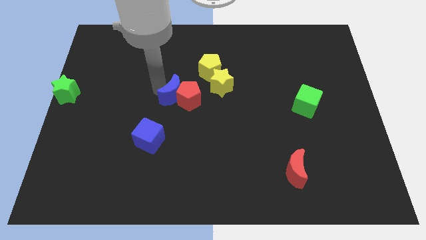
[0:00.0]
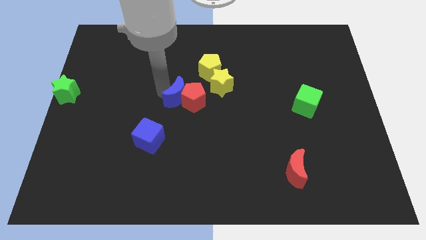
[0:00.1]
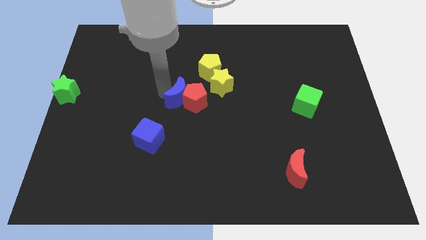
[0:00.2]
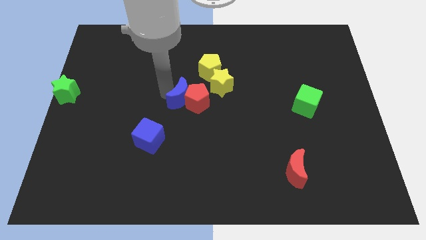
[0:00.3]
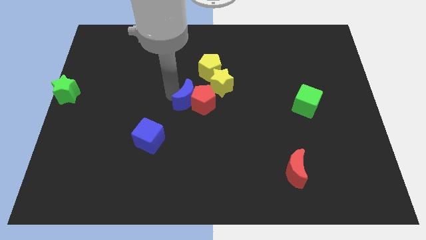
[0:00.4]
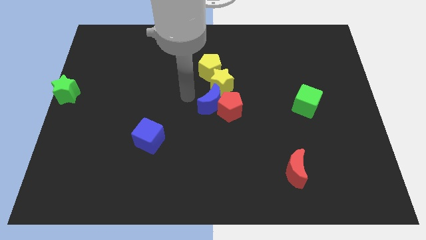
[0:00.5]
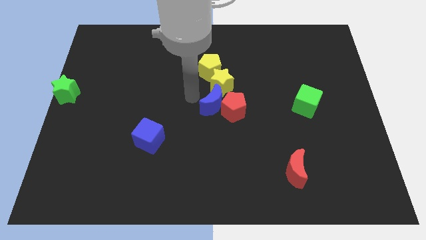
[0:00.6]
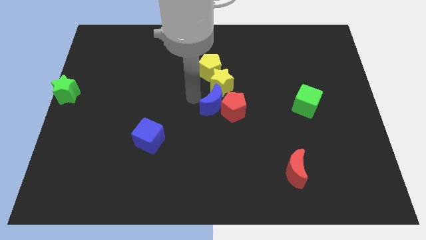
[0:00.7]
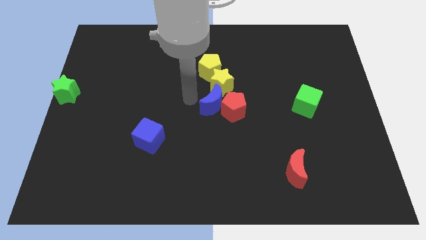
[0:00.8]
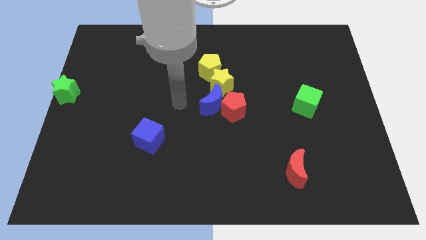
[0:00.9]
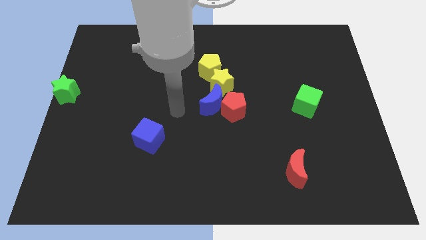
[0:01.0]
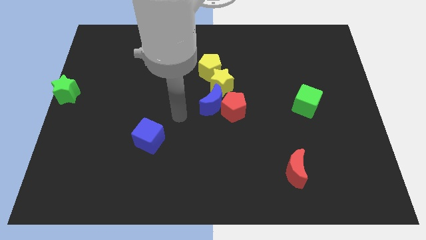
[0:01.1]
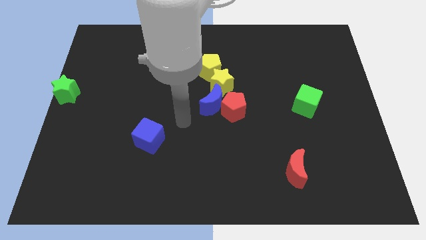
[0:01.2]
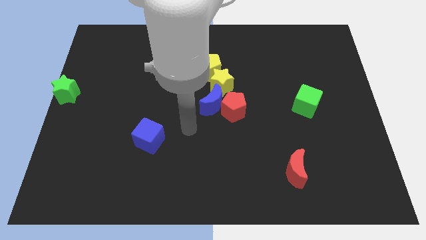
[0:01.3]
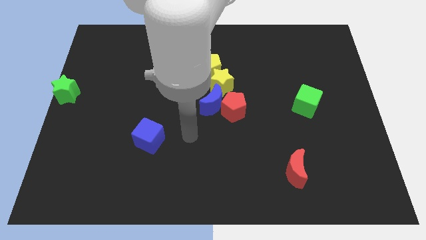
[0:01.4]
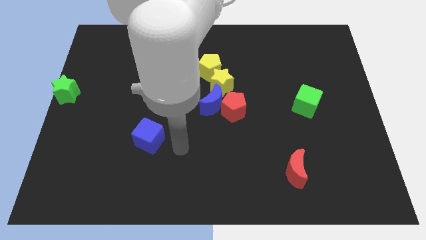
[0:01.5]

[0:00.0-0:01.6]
put the blue moon and red pentagon at the center of the board

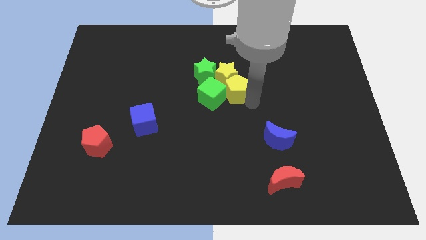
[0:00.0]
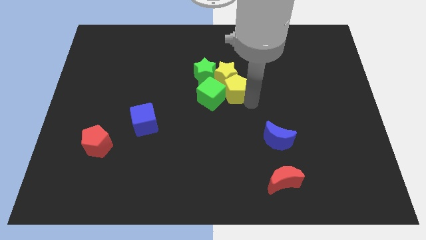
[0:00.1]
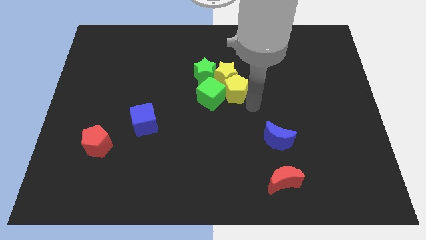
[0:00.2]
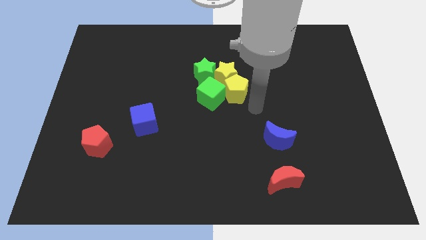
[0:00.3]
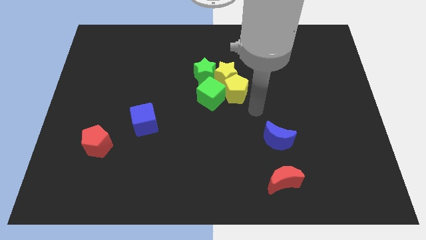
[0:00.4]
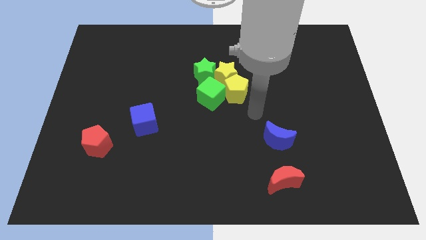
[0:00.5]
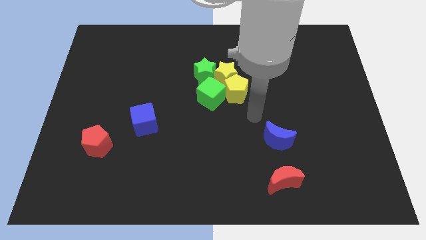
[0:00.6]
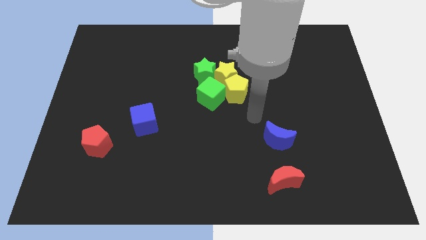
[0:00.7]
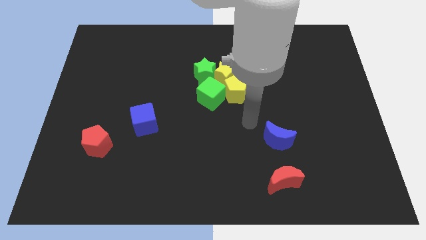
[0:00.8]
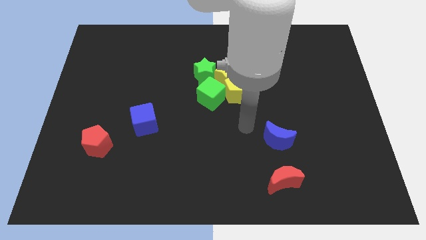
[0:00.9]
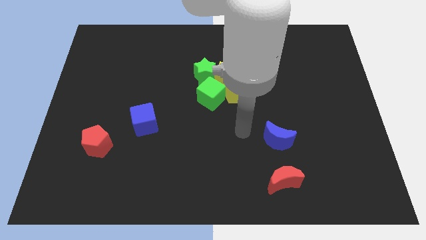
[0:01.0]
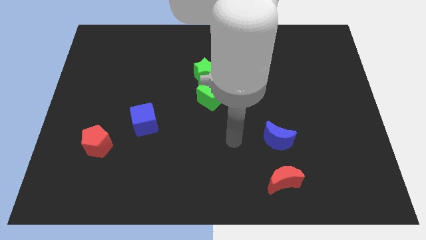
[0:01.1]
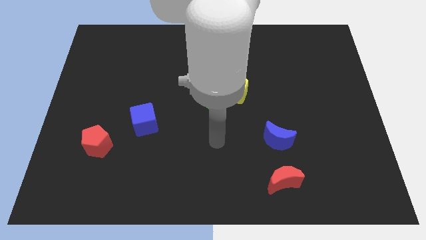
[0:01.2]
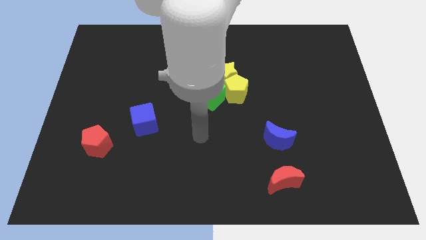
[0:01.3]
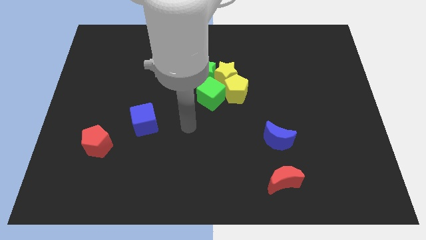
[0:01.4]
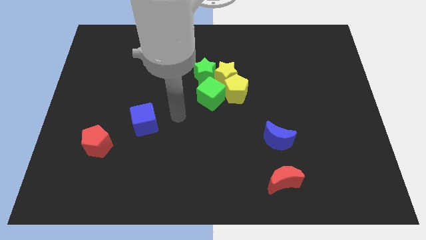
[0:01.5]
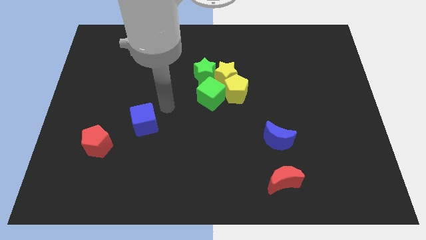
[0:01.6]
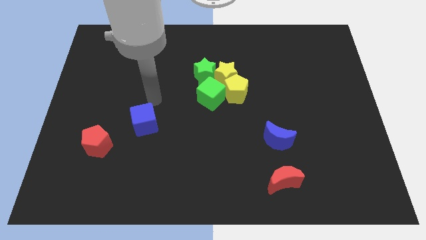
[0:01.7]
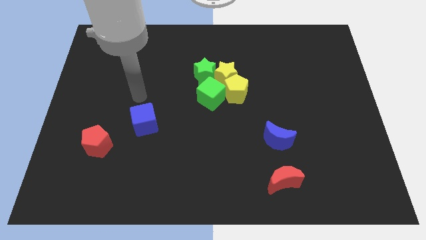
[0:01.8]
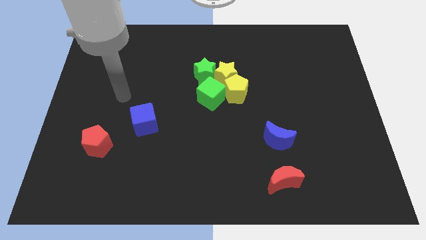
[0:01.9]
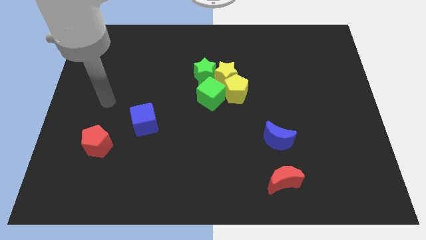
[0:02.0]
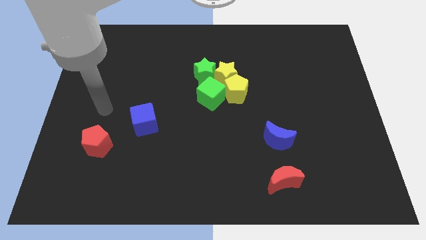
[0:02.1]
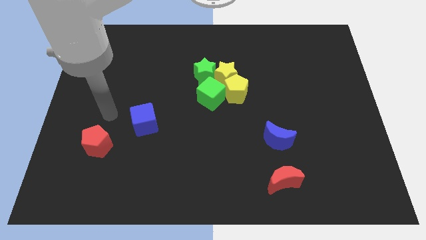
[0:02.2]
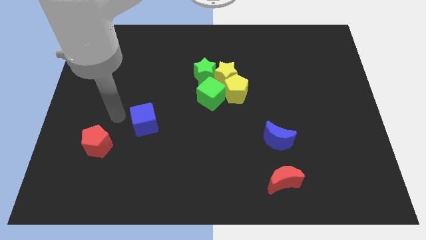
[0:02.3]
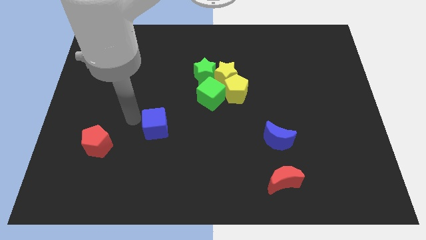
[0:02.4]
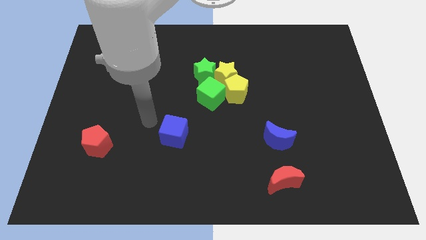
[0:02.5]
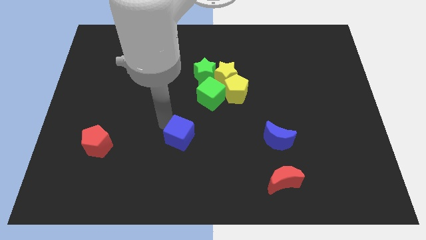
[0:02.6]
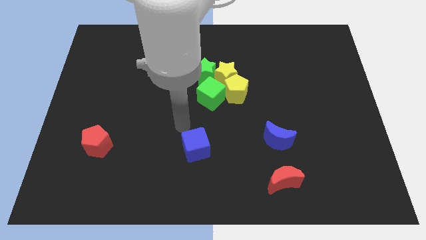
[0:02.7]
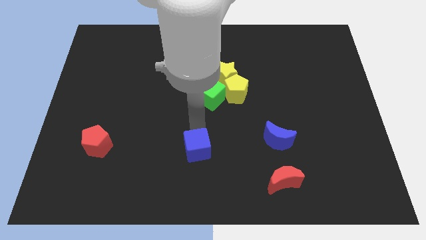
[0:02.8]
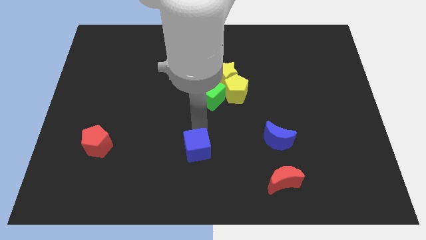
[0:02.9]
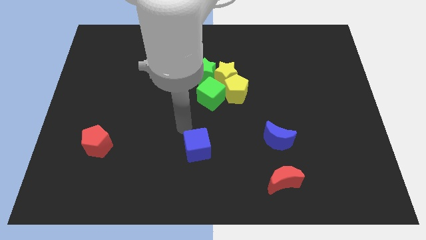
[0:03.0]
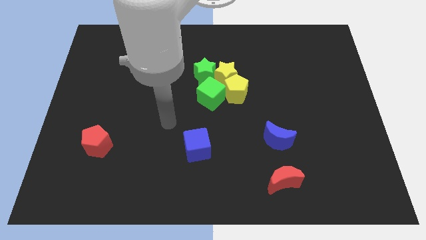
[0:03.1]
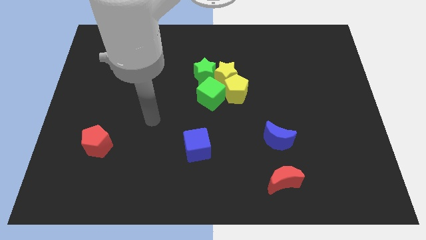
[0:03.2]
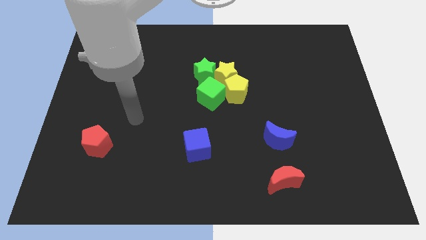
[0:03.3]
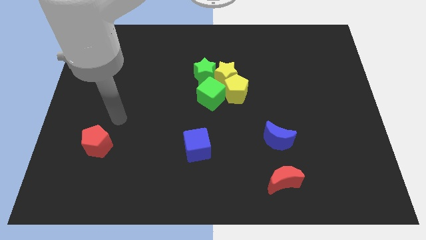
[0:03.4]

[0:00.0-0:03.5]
move the blue cube below the green cube

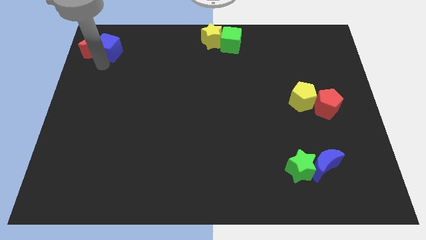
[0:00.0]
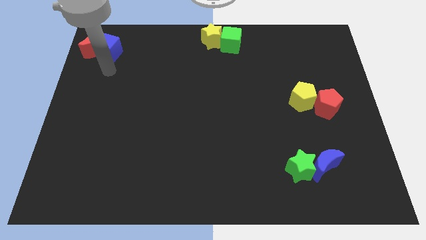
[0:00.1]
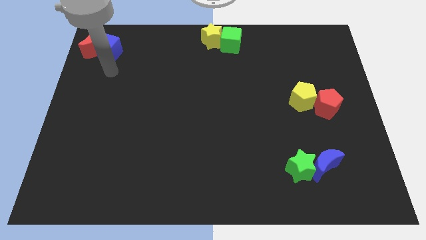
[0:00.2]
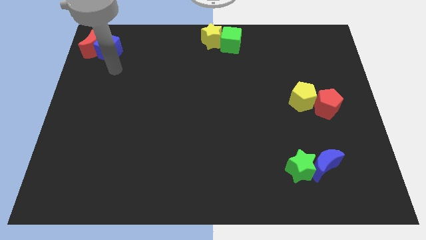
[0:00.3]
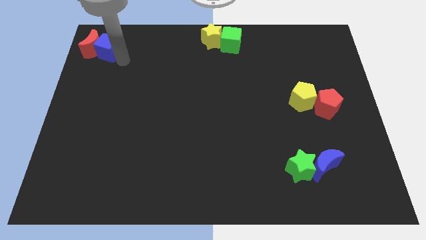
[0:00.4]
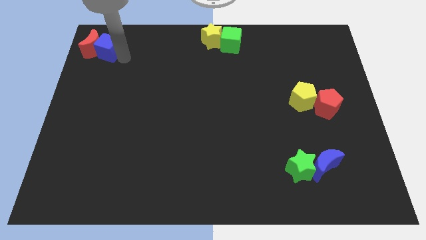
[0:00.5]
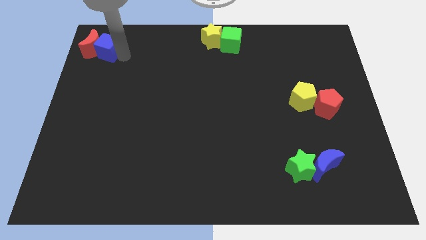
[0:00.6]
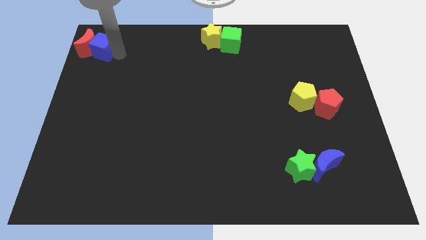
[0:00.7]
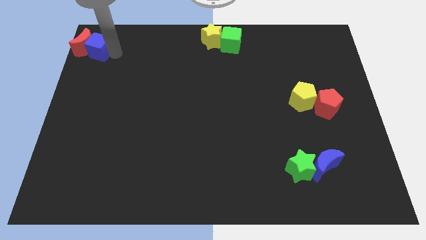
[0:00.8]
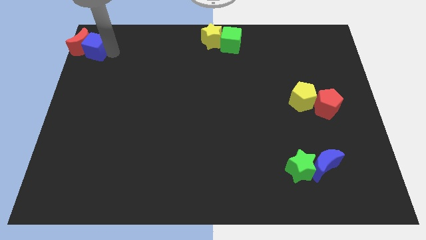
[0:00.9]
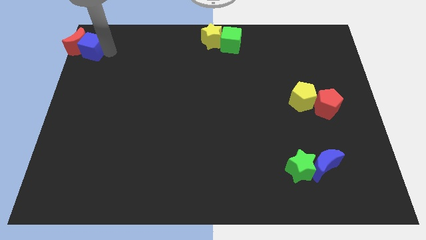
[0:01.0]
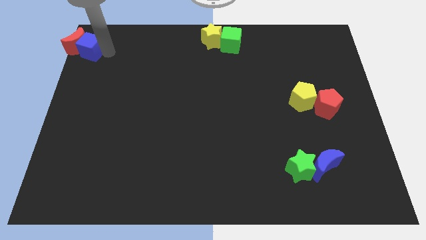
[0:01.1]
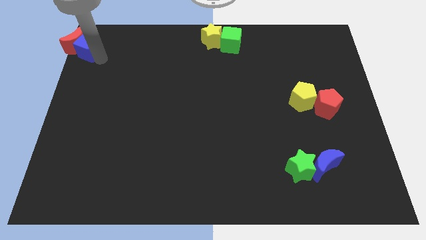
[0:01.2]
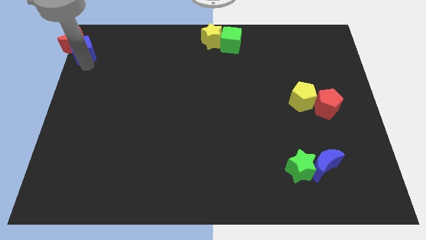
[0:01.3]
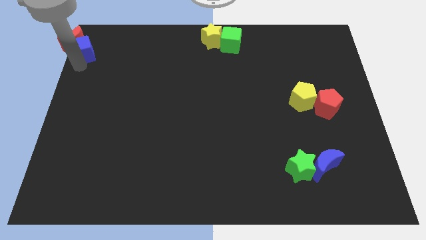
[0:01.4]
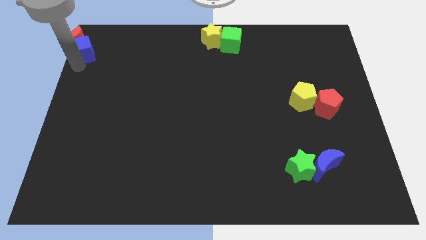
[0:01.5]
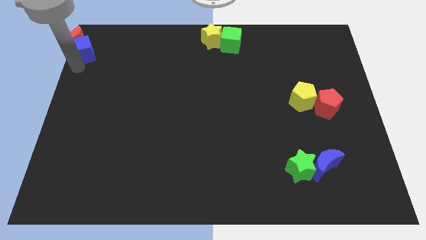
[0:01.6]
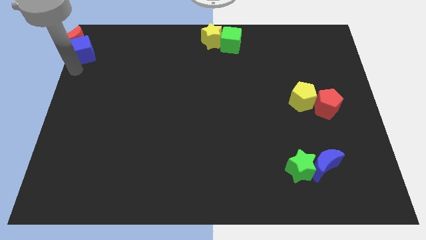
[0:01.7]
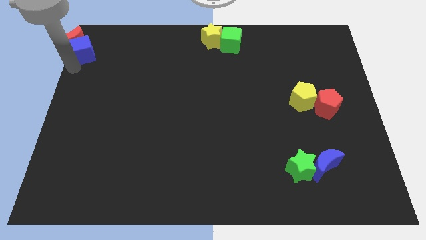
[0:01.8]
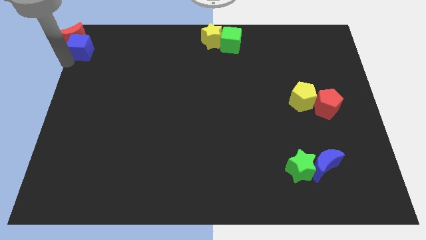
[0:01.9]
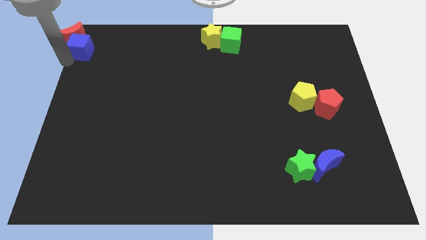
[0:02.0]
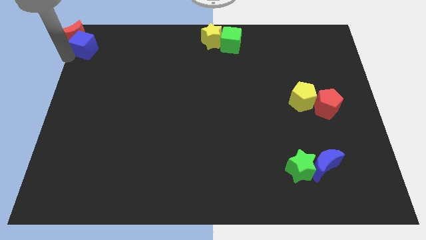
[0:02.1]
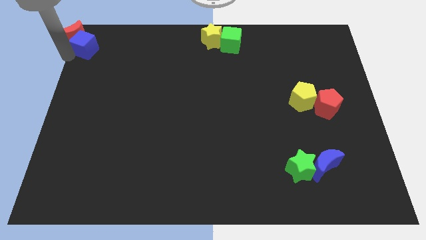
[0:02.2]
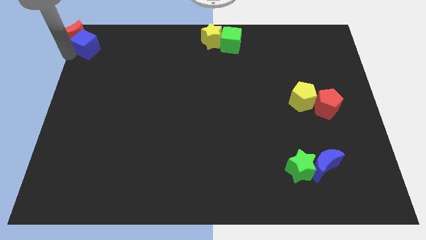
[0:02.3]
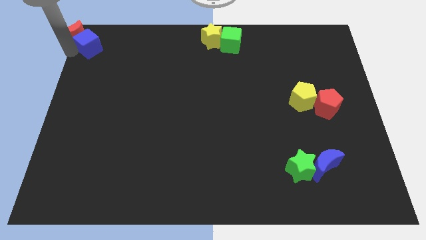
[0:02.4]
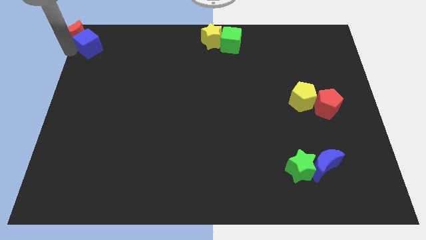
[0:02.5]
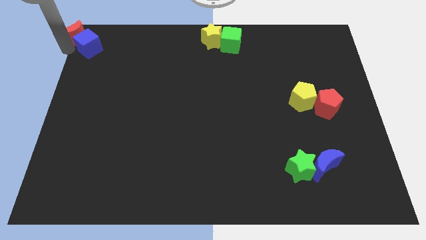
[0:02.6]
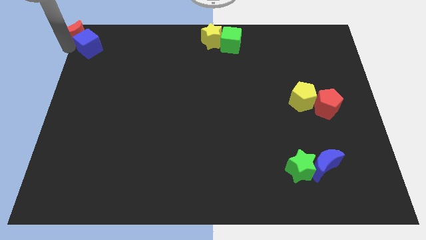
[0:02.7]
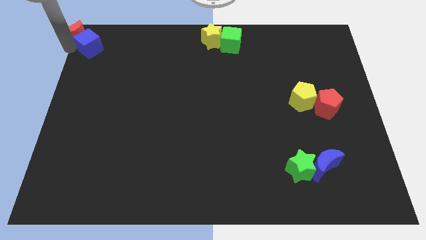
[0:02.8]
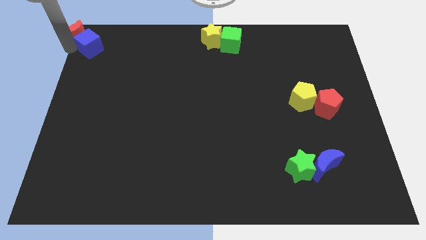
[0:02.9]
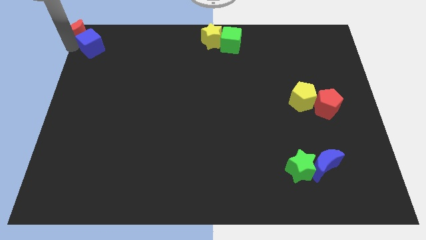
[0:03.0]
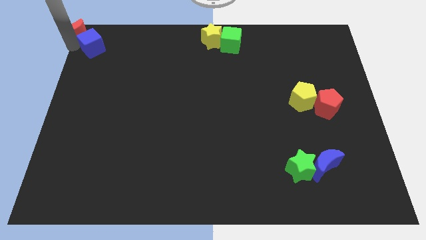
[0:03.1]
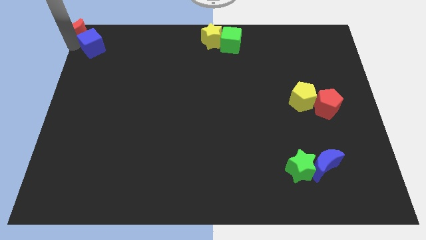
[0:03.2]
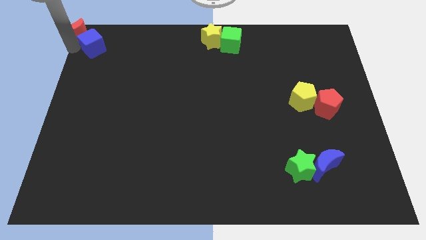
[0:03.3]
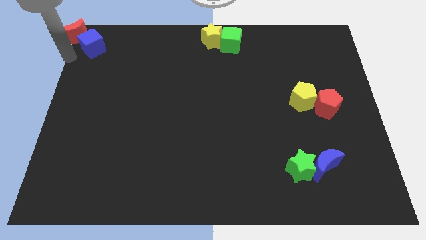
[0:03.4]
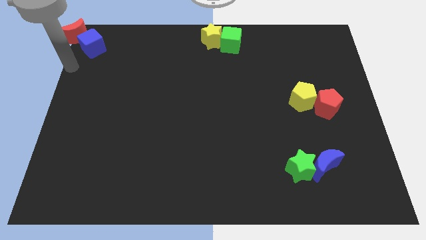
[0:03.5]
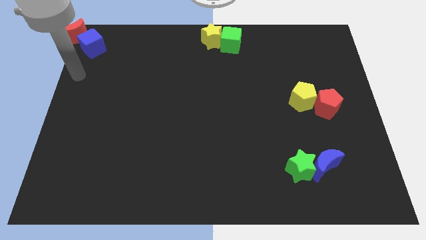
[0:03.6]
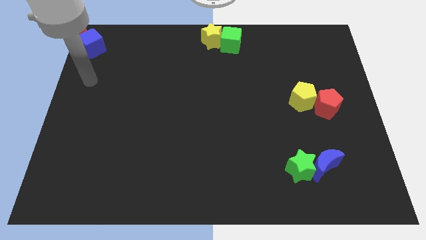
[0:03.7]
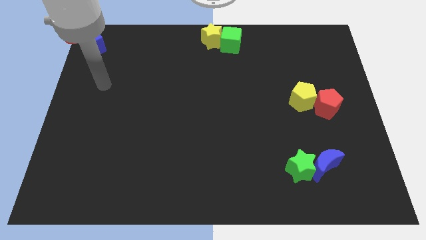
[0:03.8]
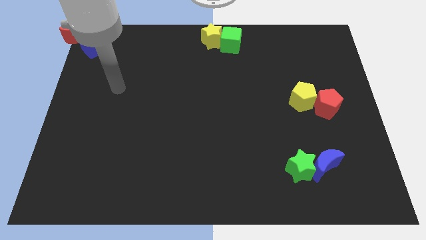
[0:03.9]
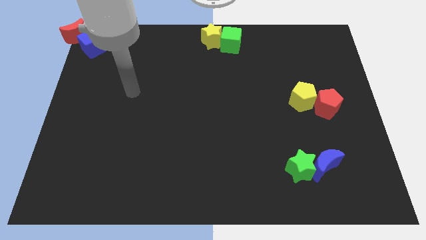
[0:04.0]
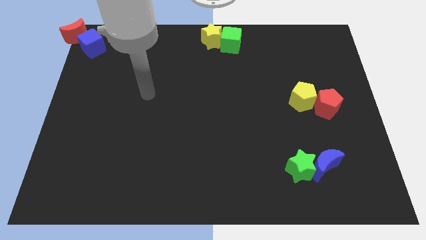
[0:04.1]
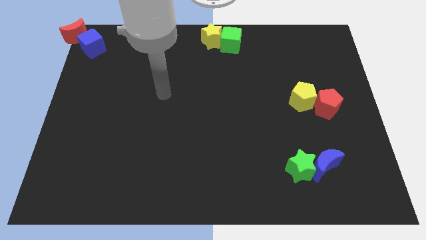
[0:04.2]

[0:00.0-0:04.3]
place the blue cube and the red crescent at the top left corner of the board
